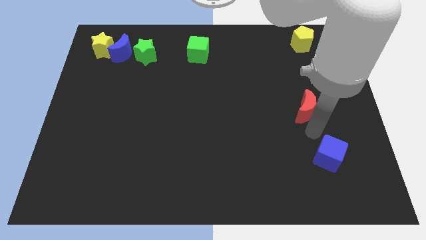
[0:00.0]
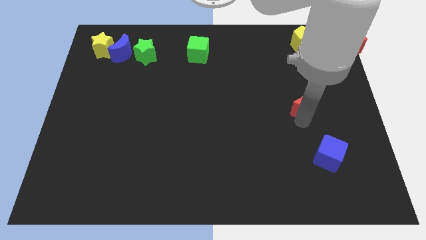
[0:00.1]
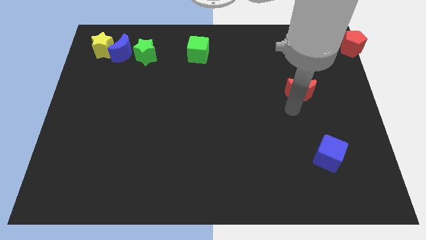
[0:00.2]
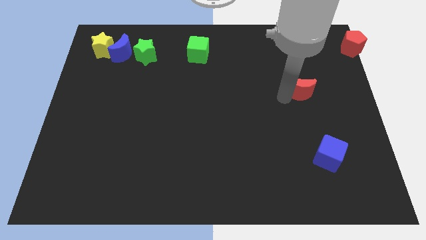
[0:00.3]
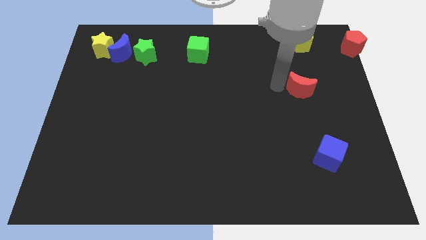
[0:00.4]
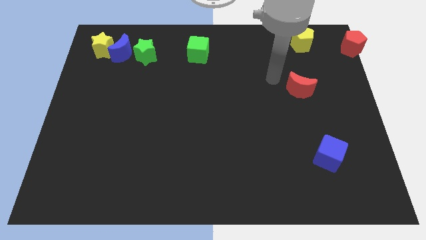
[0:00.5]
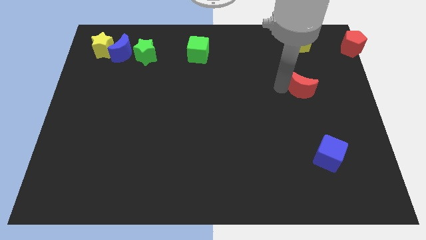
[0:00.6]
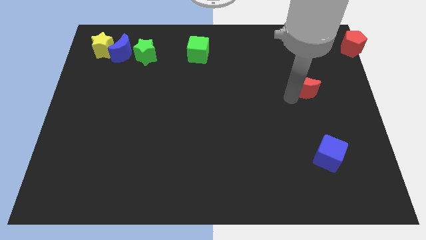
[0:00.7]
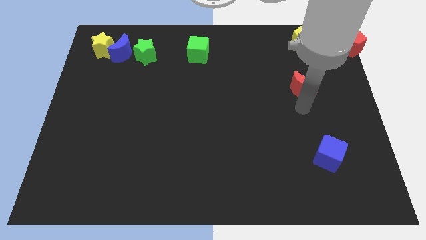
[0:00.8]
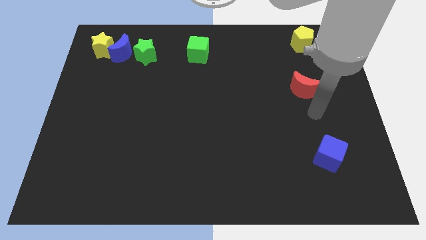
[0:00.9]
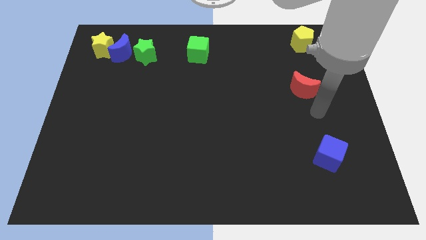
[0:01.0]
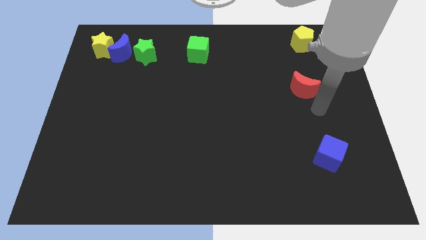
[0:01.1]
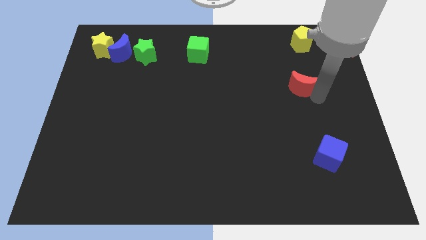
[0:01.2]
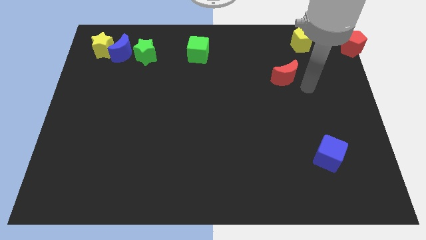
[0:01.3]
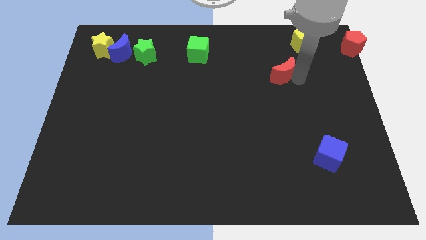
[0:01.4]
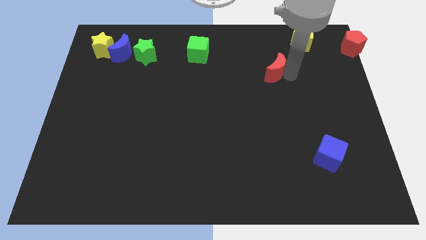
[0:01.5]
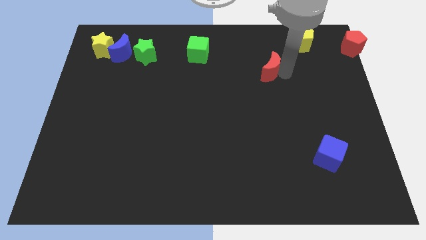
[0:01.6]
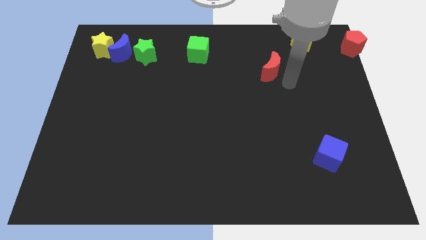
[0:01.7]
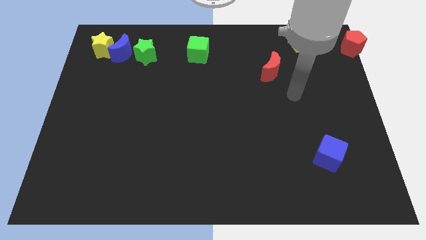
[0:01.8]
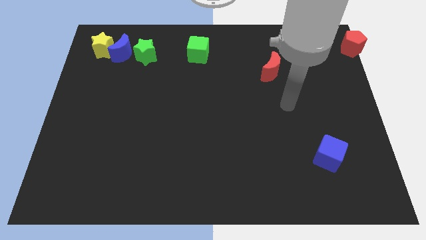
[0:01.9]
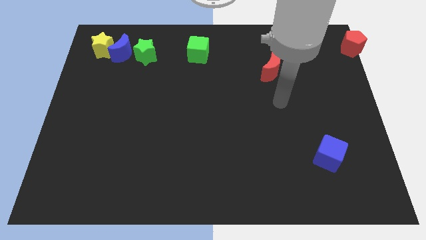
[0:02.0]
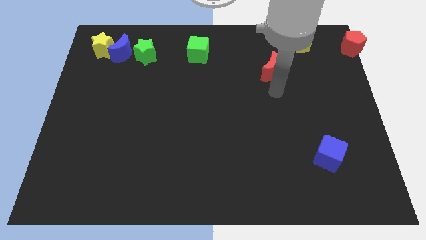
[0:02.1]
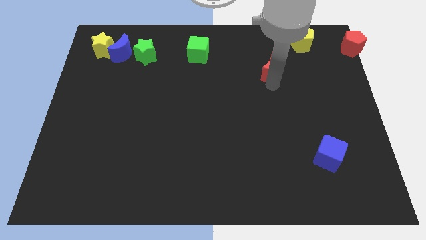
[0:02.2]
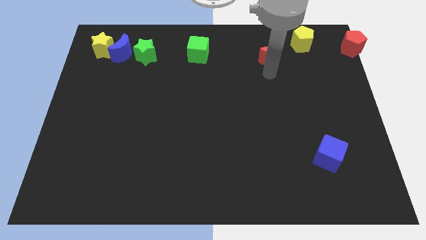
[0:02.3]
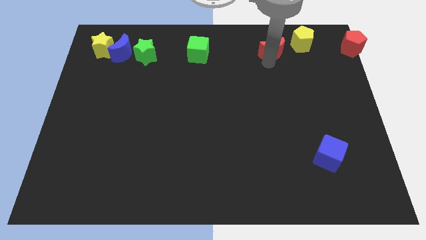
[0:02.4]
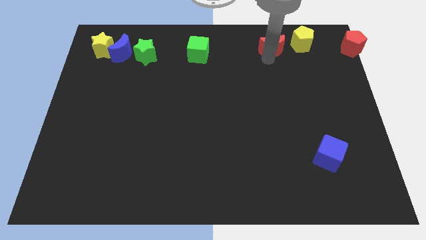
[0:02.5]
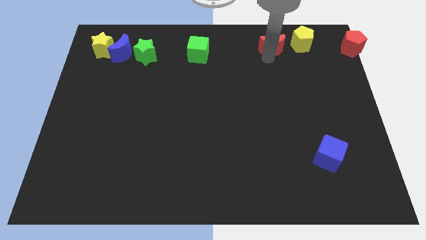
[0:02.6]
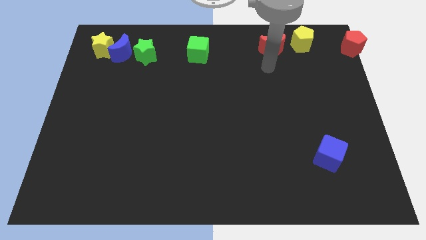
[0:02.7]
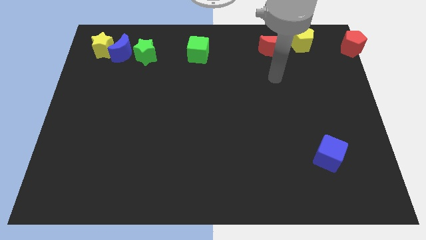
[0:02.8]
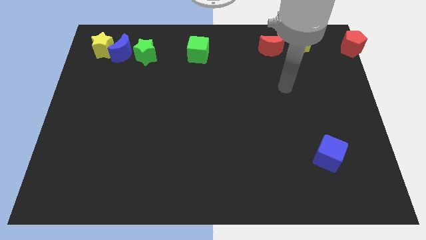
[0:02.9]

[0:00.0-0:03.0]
move the red crescent to the left of the yellow pentagon

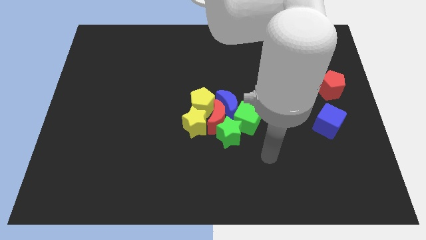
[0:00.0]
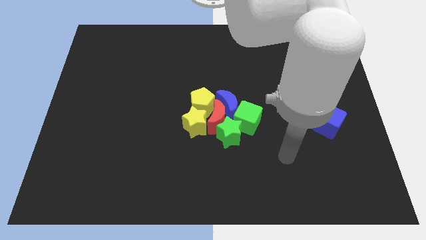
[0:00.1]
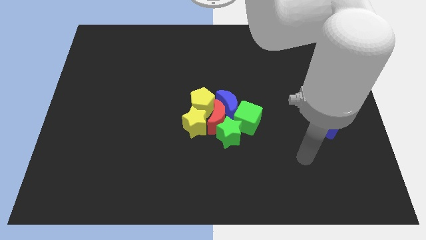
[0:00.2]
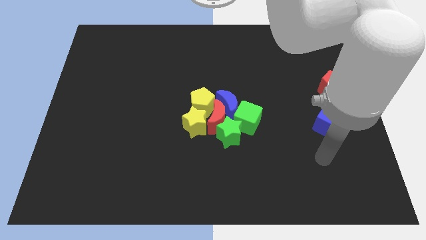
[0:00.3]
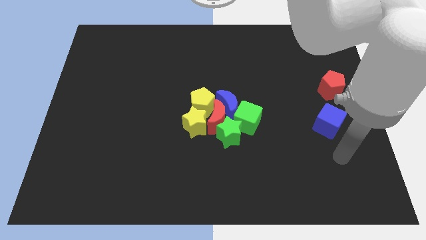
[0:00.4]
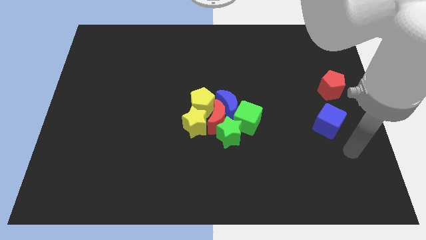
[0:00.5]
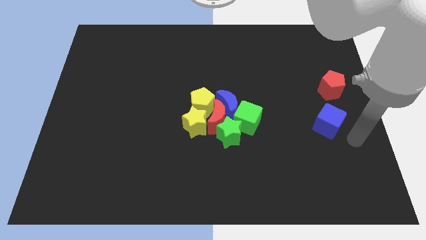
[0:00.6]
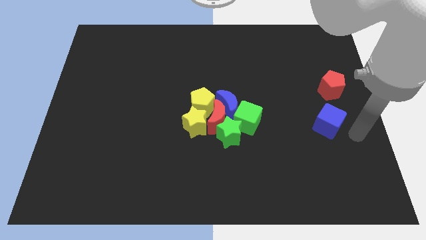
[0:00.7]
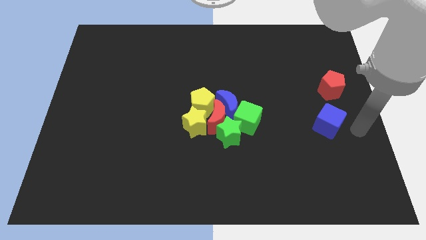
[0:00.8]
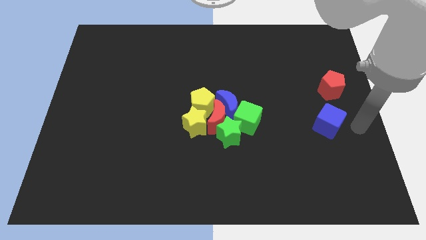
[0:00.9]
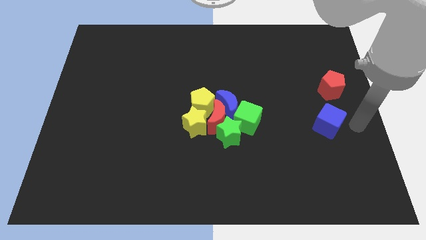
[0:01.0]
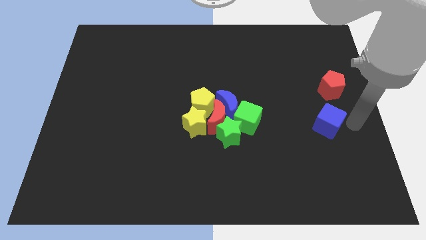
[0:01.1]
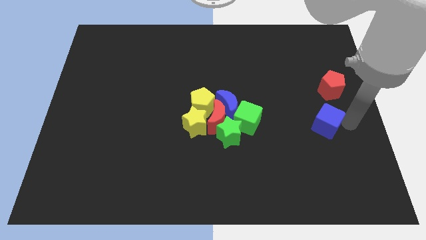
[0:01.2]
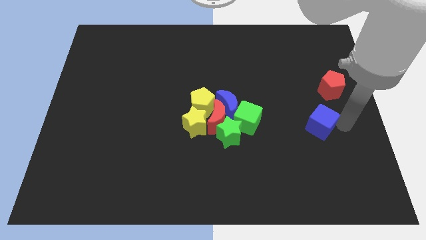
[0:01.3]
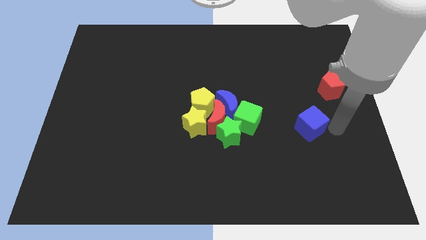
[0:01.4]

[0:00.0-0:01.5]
move the arm towards the blue cube

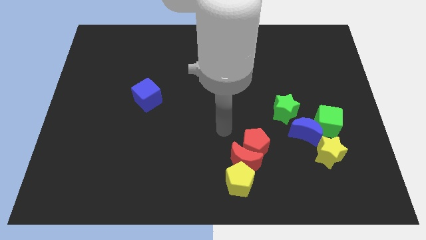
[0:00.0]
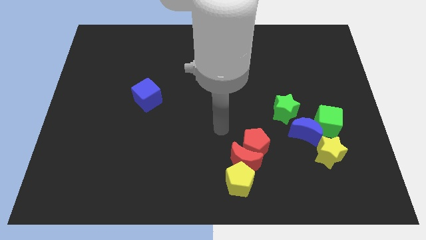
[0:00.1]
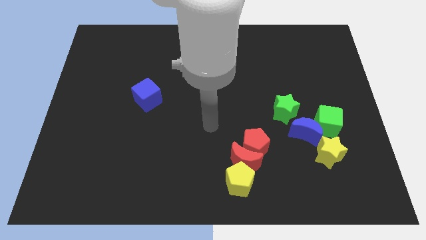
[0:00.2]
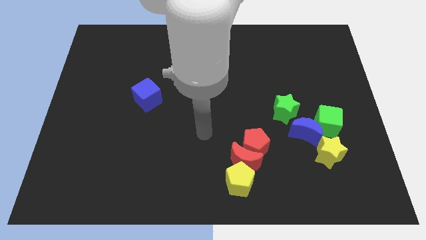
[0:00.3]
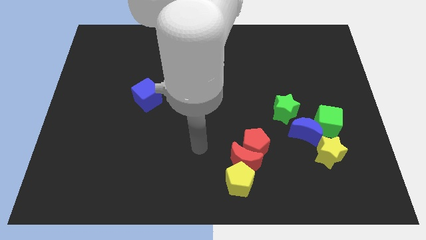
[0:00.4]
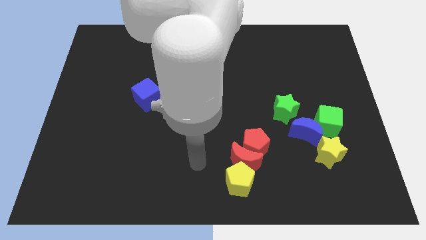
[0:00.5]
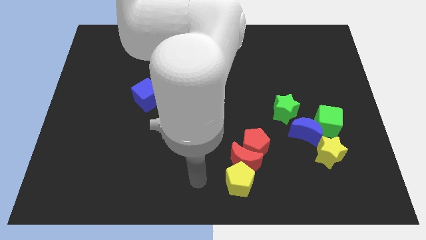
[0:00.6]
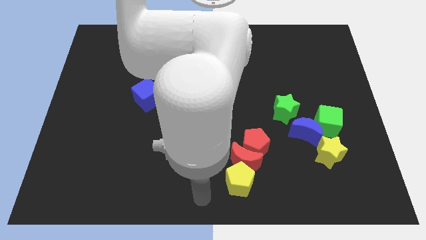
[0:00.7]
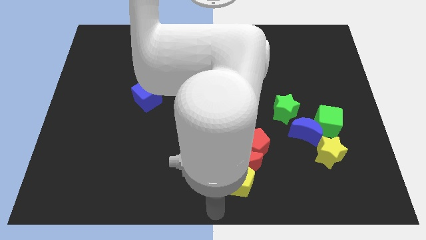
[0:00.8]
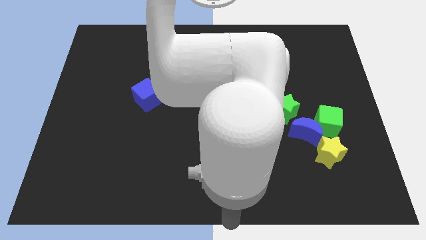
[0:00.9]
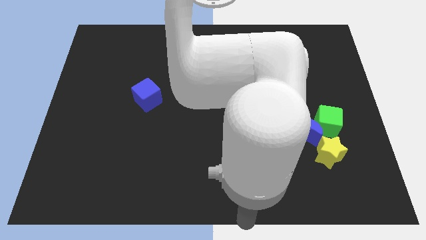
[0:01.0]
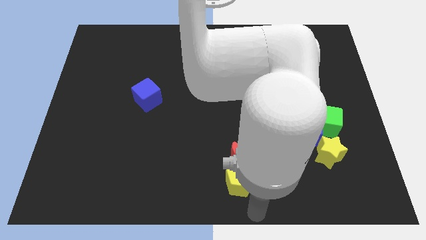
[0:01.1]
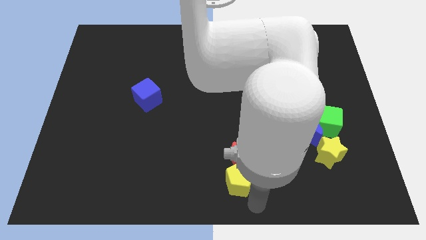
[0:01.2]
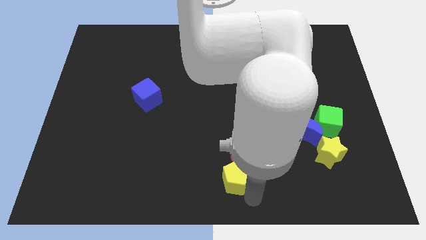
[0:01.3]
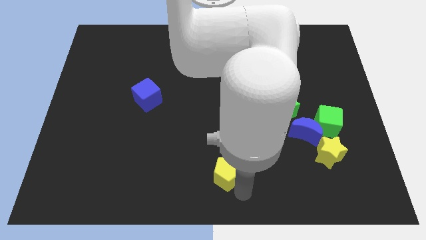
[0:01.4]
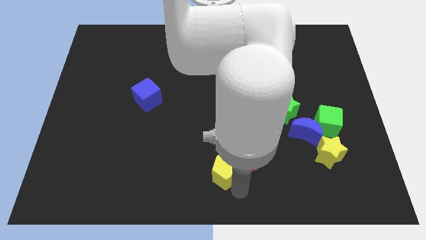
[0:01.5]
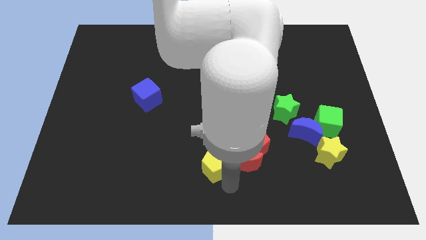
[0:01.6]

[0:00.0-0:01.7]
push the yellow pentagon towards top

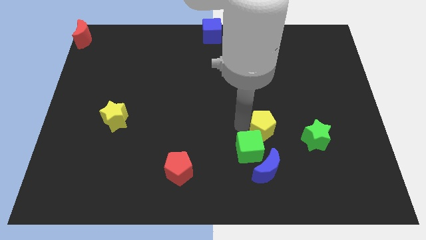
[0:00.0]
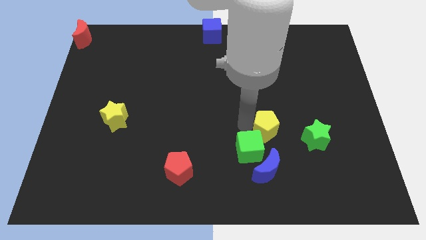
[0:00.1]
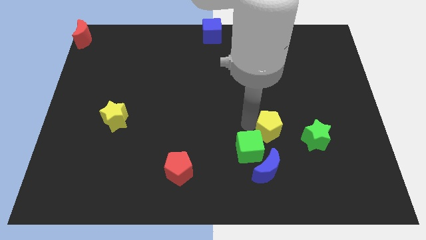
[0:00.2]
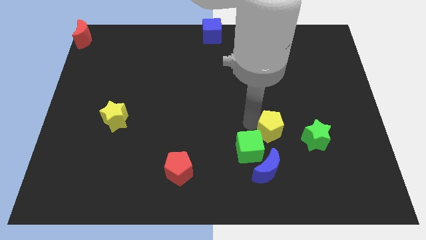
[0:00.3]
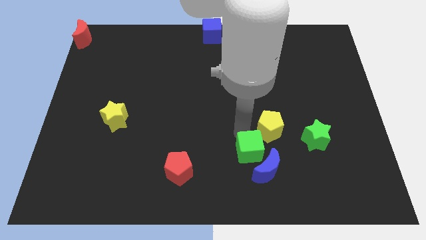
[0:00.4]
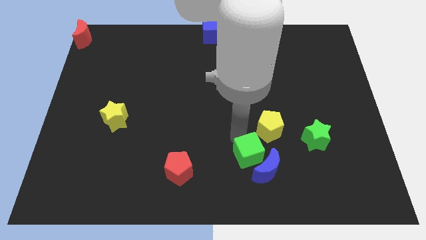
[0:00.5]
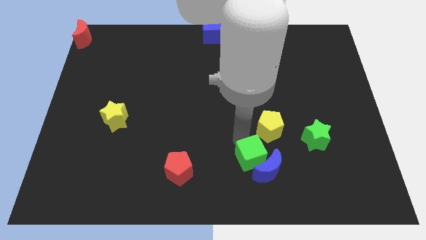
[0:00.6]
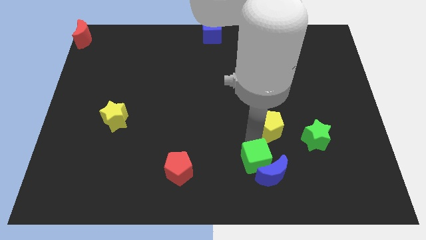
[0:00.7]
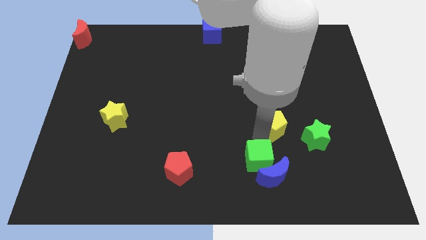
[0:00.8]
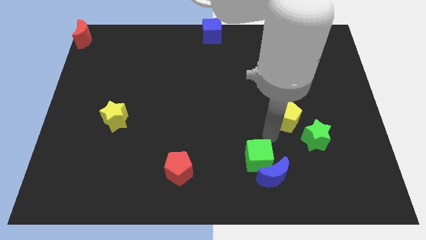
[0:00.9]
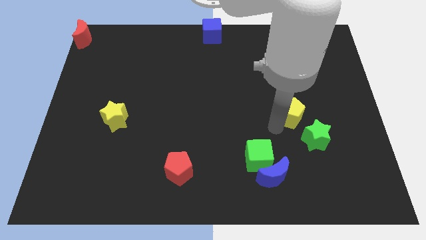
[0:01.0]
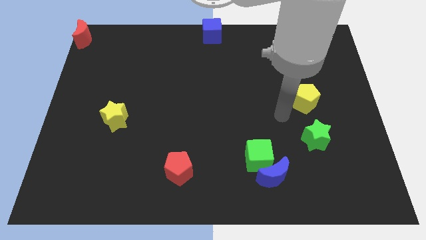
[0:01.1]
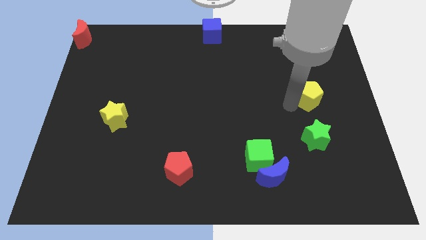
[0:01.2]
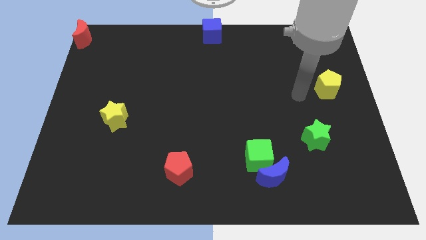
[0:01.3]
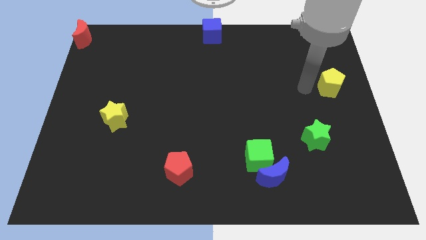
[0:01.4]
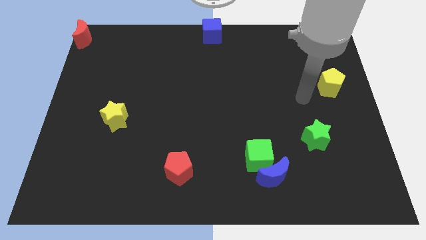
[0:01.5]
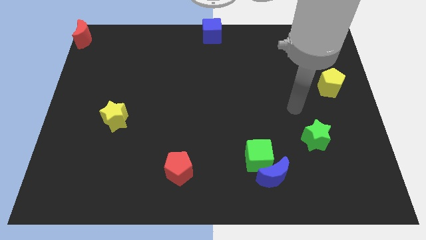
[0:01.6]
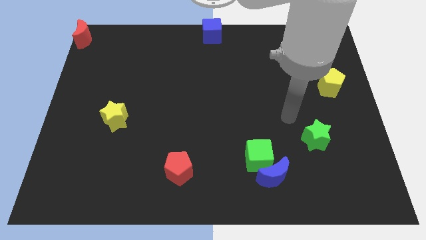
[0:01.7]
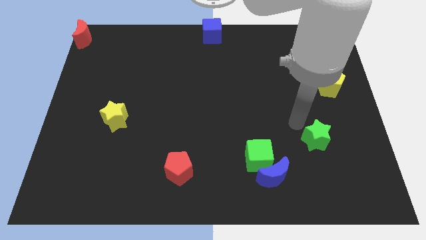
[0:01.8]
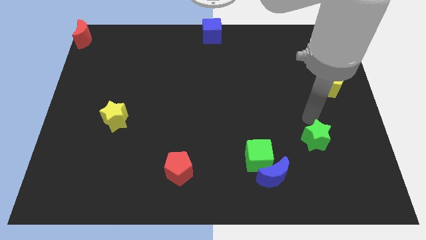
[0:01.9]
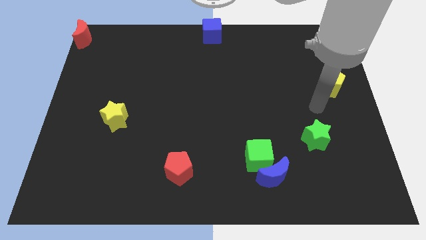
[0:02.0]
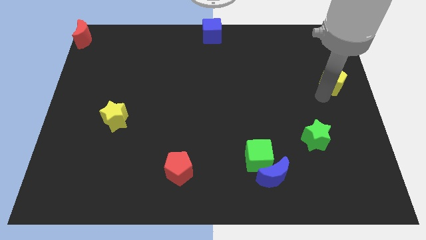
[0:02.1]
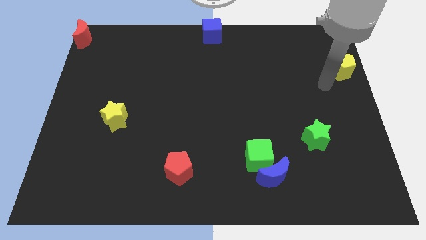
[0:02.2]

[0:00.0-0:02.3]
separate the yellow pentagon to the top right side

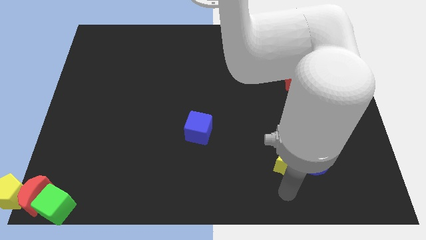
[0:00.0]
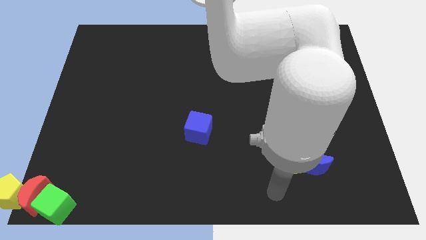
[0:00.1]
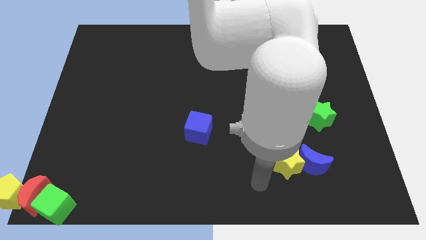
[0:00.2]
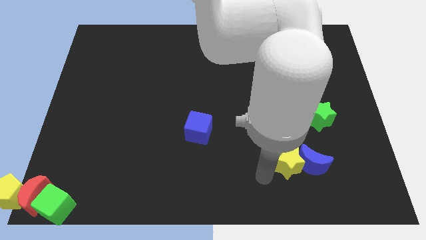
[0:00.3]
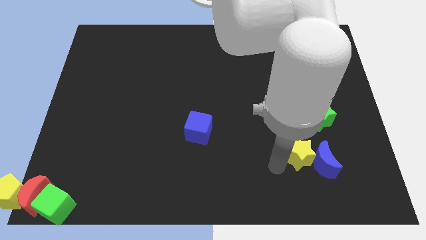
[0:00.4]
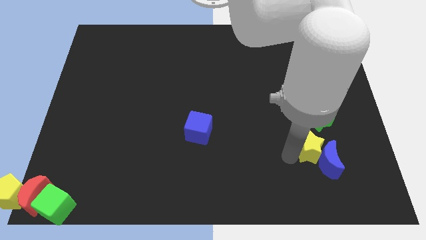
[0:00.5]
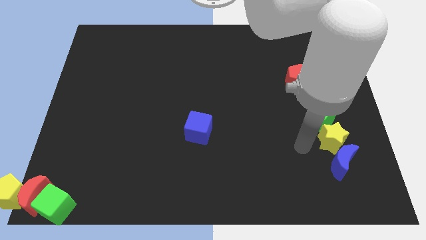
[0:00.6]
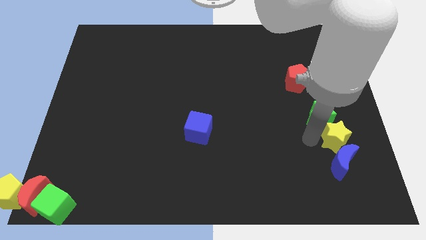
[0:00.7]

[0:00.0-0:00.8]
put the yellow star below the green star
